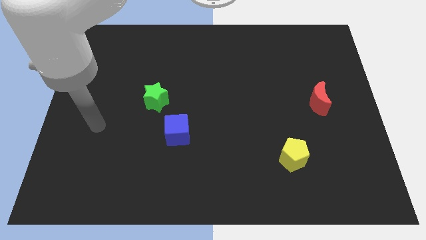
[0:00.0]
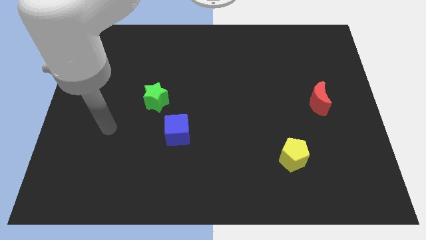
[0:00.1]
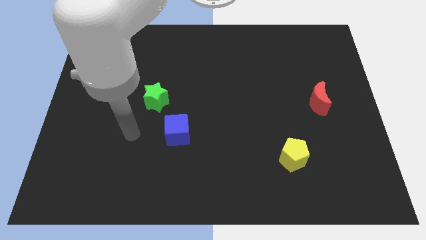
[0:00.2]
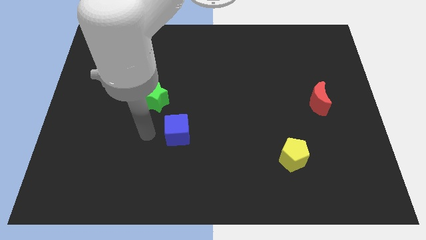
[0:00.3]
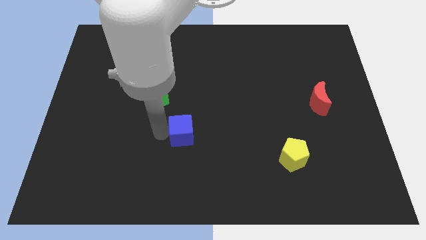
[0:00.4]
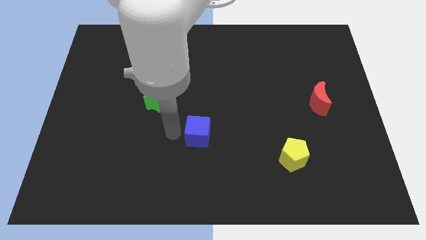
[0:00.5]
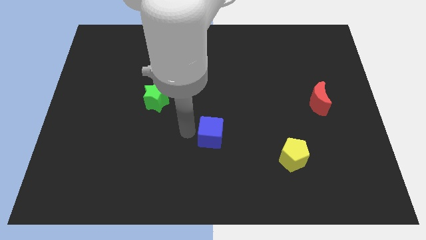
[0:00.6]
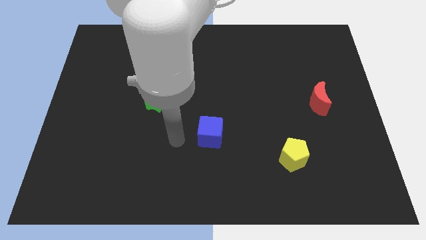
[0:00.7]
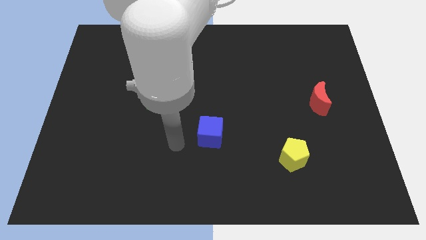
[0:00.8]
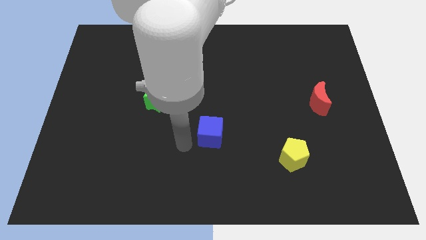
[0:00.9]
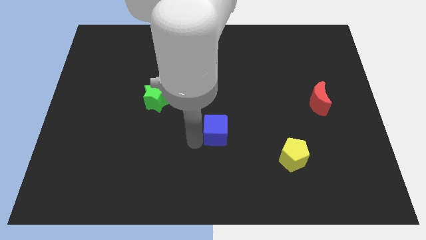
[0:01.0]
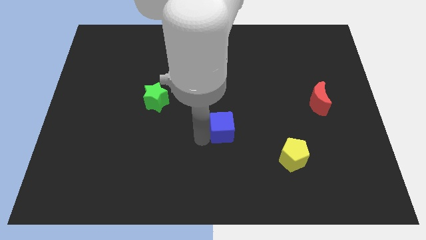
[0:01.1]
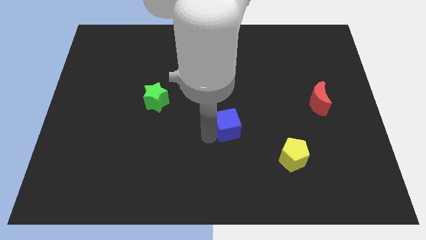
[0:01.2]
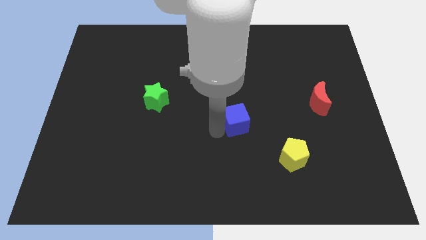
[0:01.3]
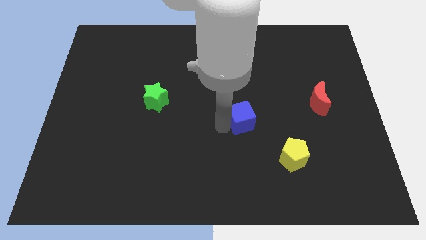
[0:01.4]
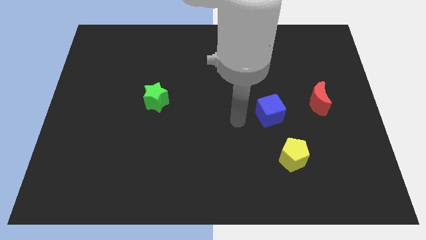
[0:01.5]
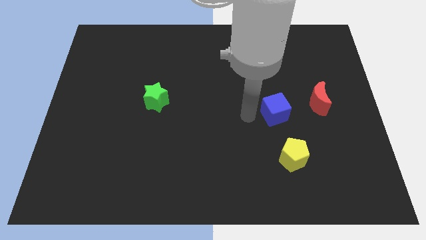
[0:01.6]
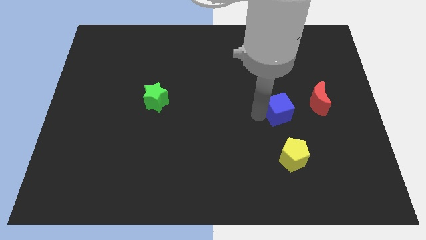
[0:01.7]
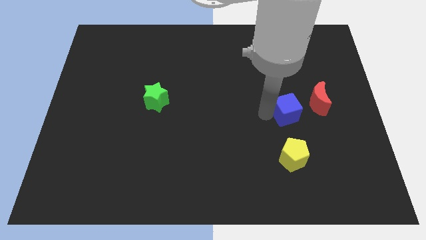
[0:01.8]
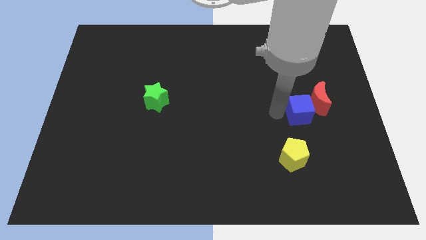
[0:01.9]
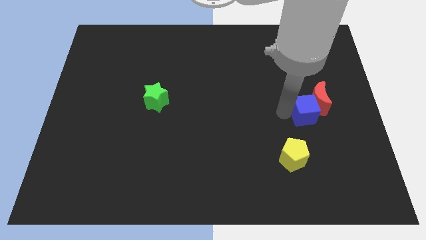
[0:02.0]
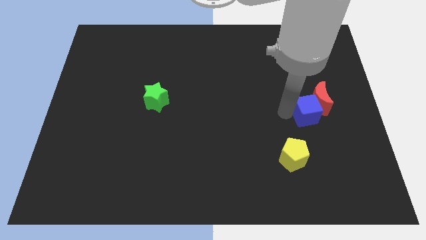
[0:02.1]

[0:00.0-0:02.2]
slide the blue cube close to the red block

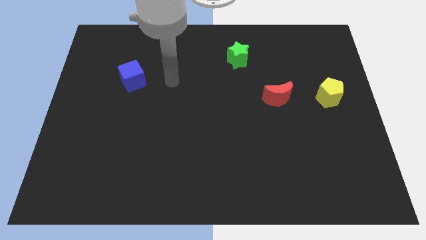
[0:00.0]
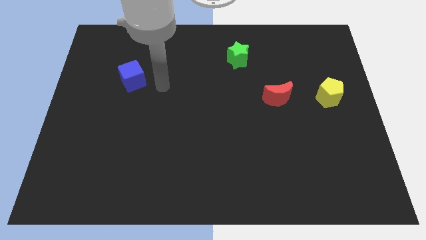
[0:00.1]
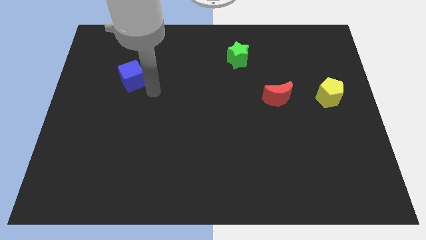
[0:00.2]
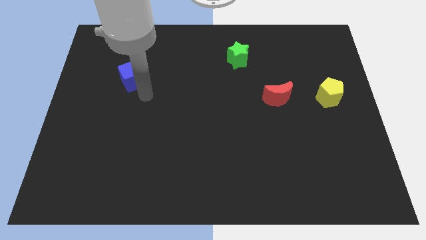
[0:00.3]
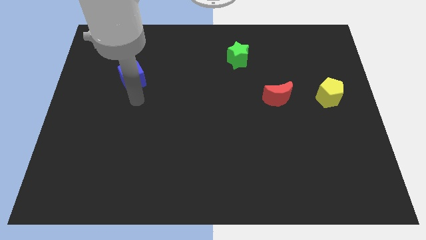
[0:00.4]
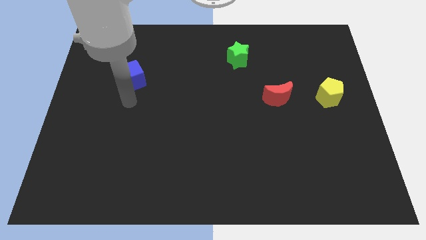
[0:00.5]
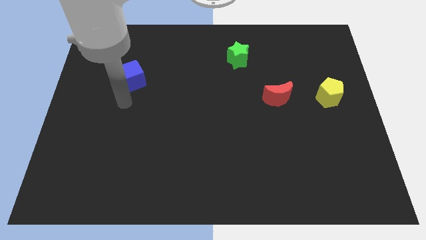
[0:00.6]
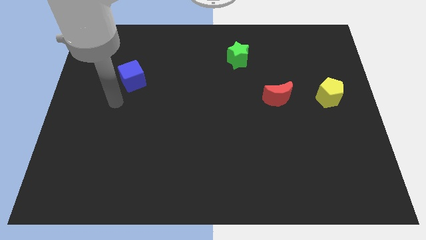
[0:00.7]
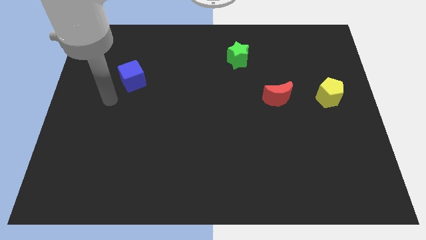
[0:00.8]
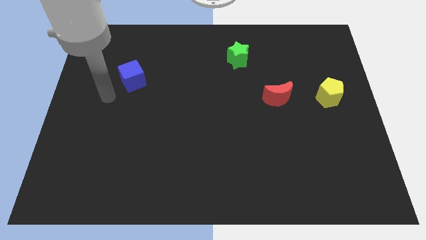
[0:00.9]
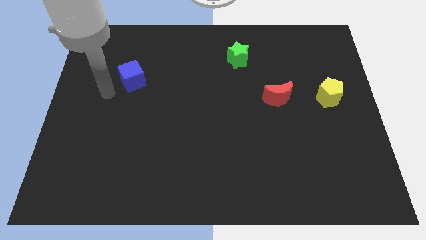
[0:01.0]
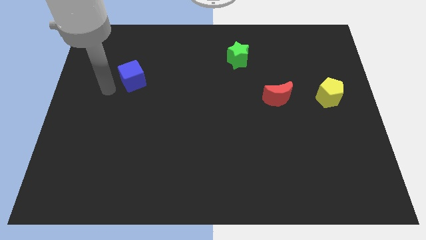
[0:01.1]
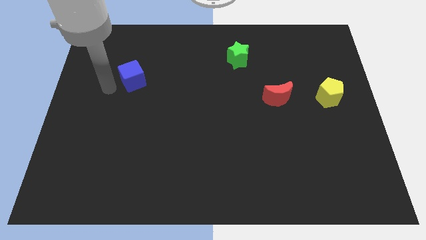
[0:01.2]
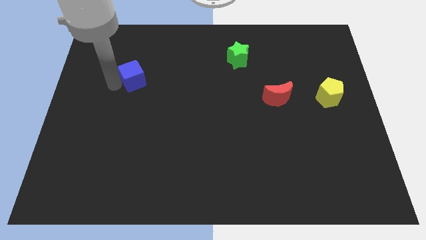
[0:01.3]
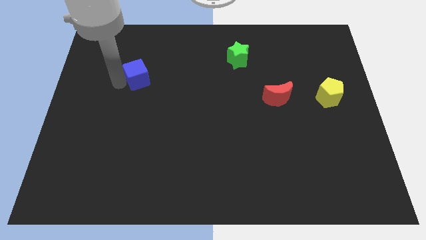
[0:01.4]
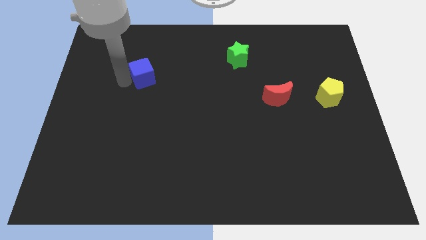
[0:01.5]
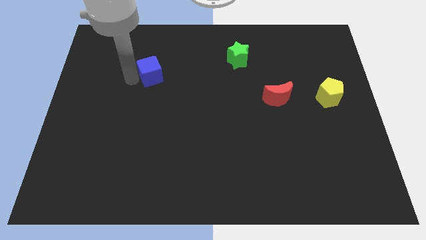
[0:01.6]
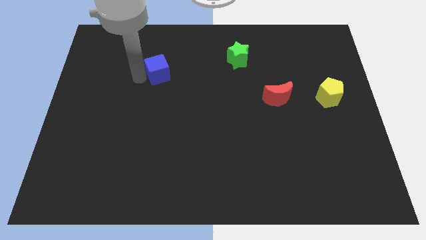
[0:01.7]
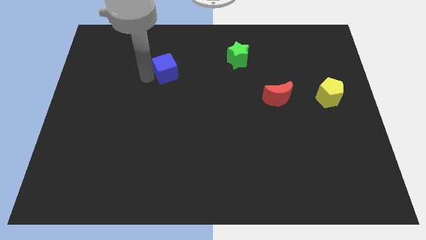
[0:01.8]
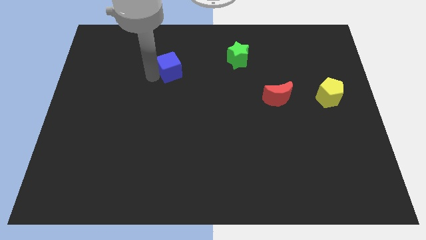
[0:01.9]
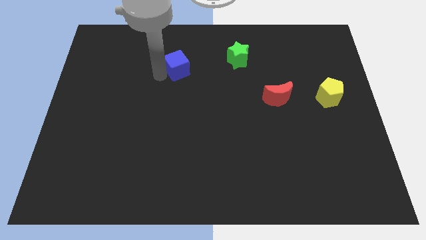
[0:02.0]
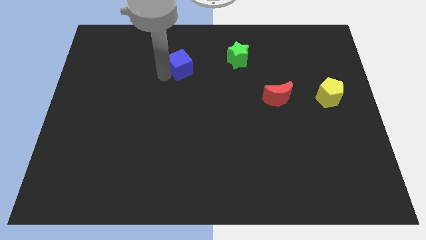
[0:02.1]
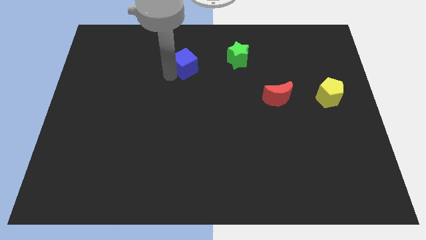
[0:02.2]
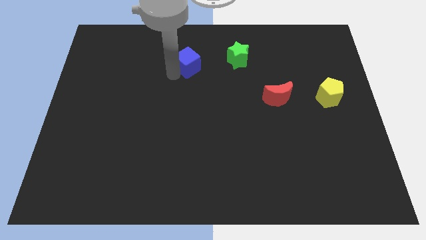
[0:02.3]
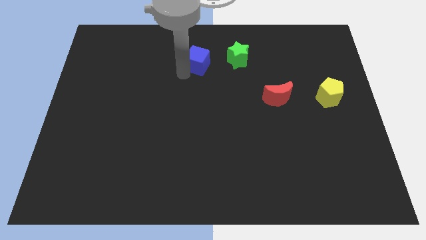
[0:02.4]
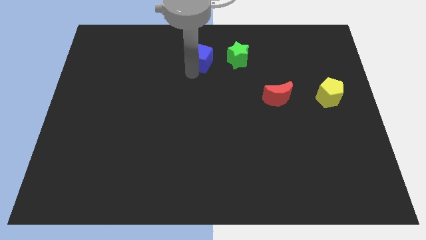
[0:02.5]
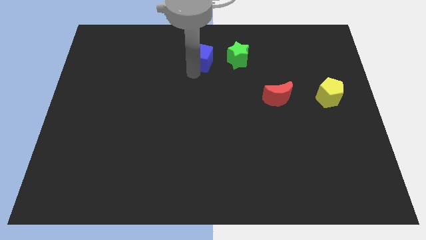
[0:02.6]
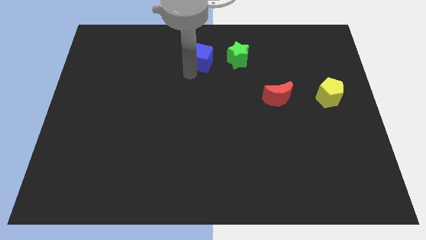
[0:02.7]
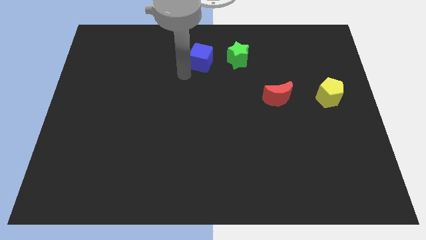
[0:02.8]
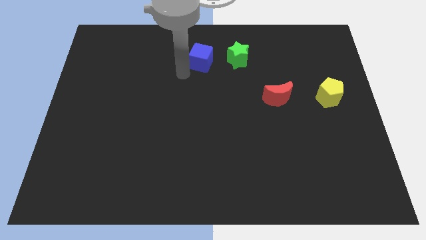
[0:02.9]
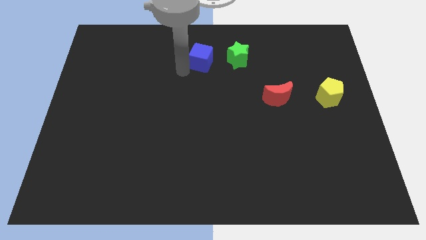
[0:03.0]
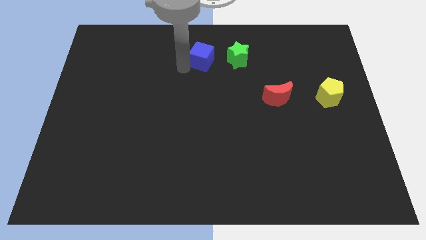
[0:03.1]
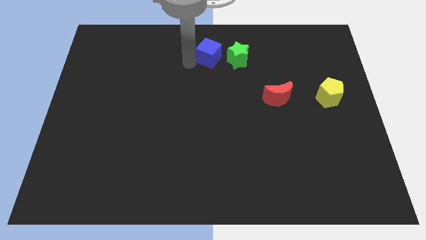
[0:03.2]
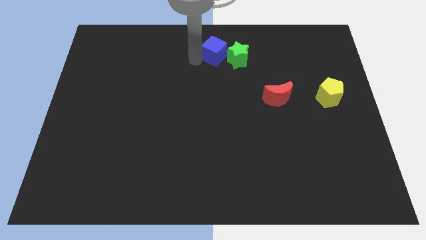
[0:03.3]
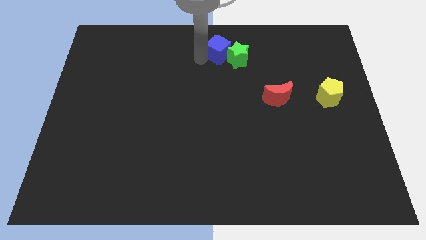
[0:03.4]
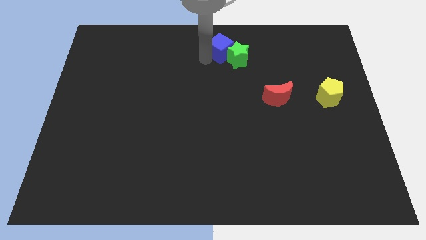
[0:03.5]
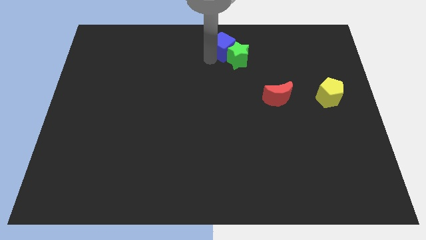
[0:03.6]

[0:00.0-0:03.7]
put the blue block next to the star

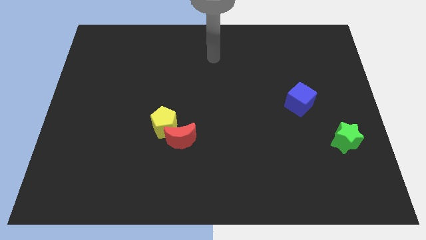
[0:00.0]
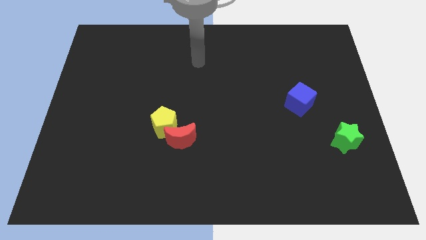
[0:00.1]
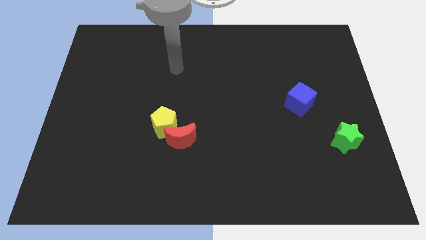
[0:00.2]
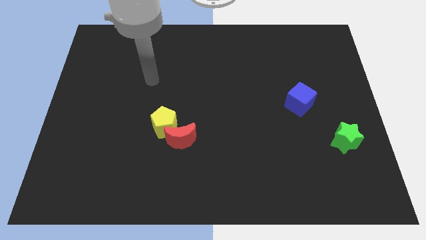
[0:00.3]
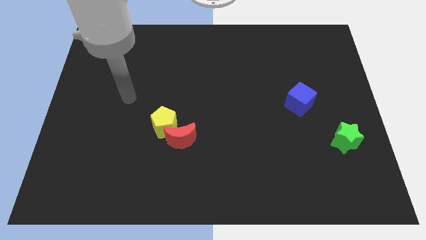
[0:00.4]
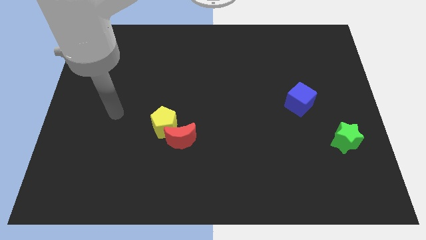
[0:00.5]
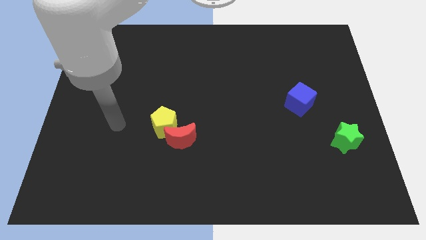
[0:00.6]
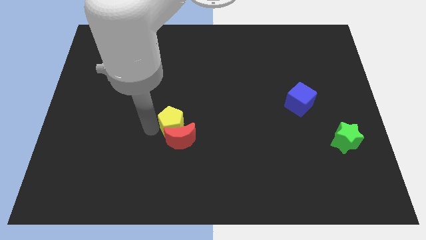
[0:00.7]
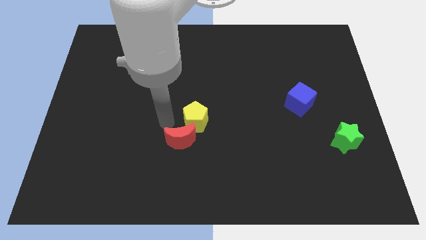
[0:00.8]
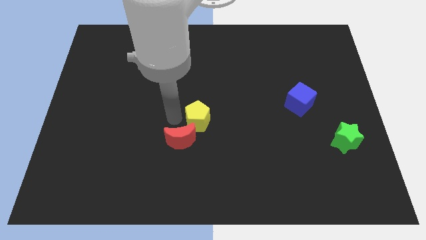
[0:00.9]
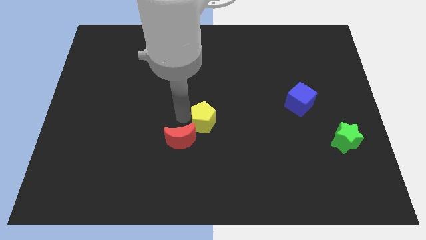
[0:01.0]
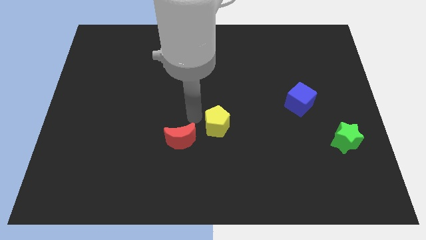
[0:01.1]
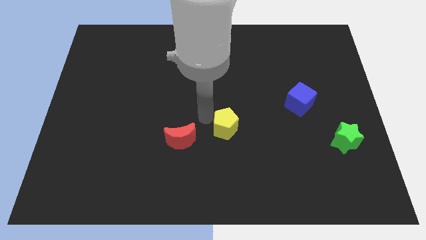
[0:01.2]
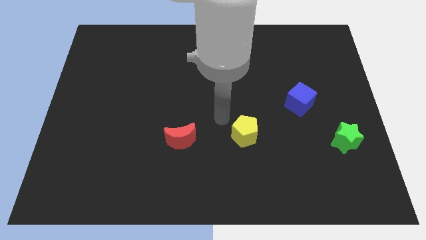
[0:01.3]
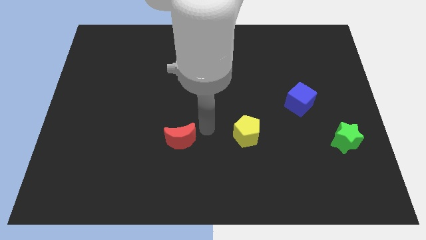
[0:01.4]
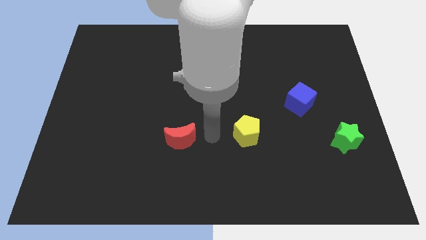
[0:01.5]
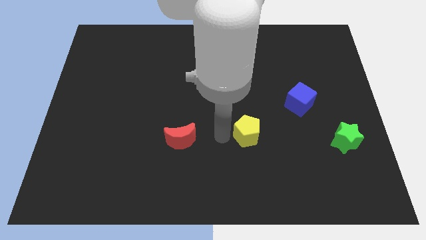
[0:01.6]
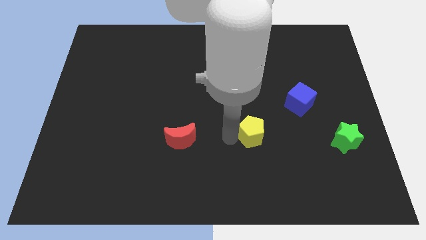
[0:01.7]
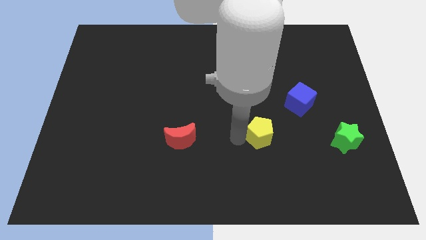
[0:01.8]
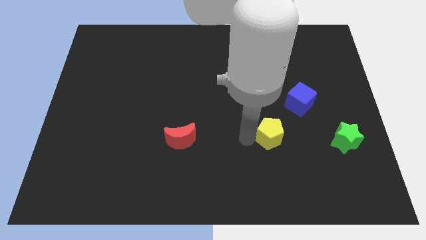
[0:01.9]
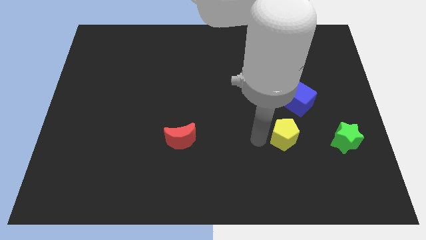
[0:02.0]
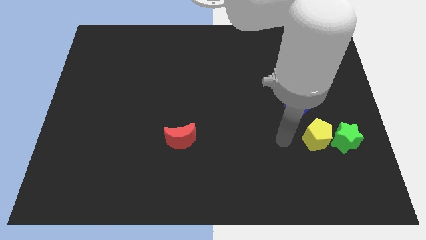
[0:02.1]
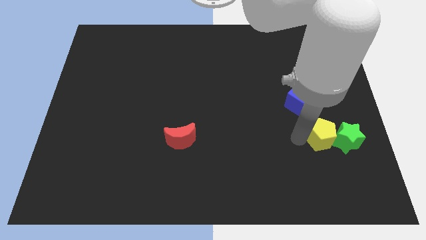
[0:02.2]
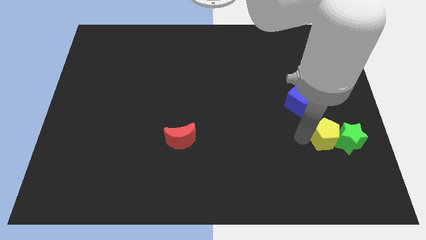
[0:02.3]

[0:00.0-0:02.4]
slide the yellow block to the star

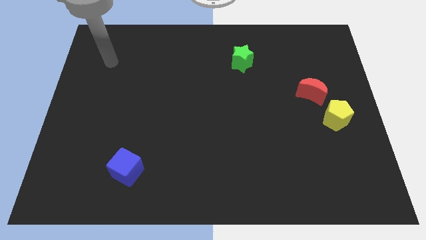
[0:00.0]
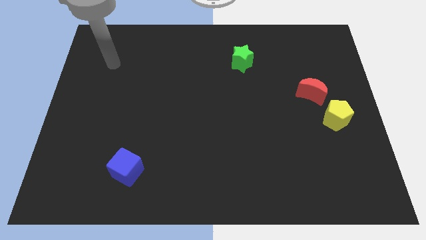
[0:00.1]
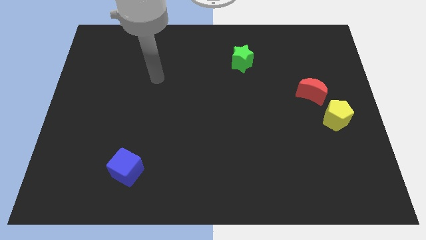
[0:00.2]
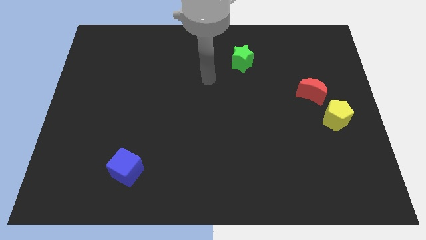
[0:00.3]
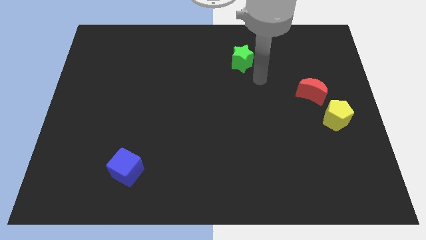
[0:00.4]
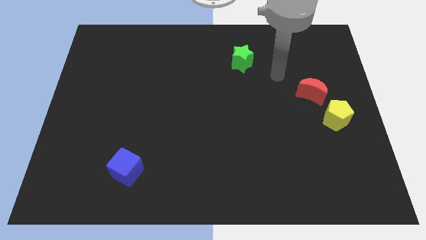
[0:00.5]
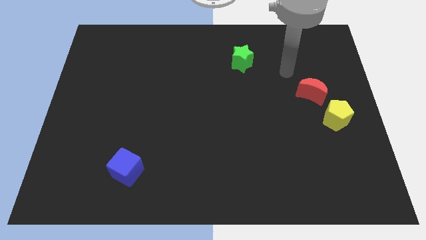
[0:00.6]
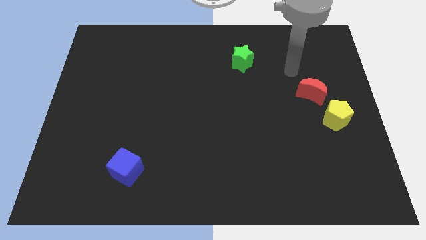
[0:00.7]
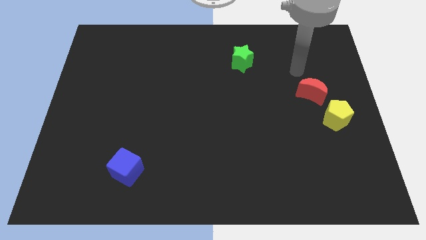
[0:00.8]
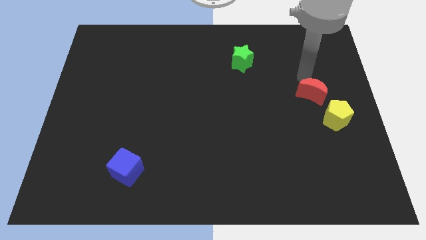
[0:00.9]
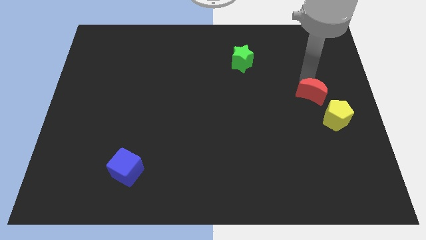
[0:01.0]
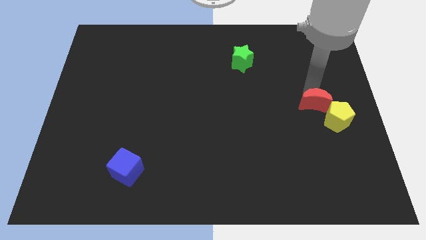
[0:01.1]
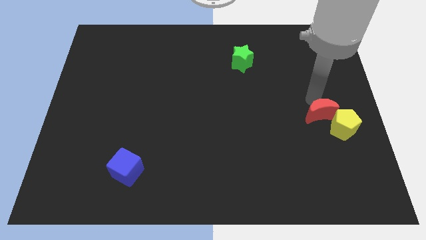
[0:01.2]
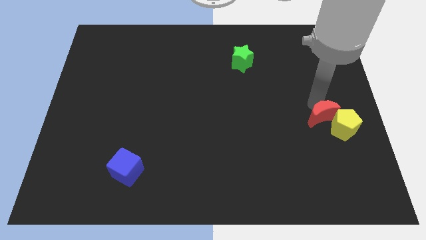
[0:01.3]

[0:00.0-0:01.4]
push the red block to the pentagon
